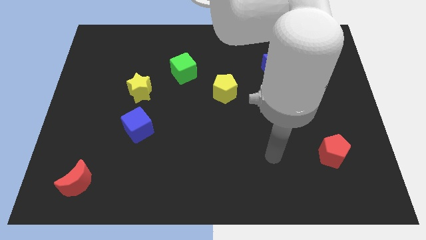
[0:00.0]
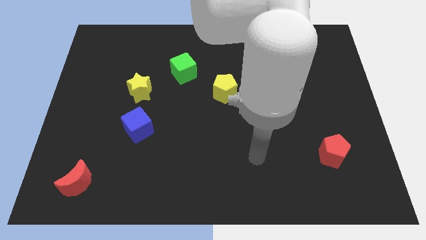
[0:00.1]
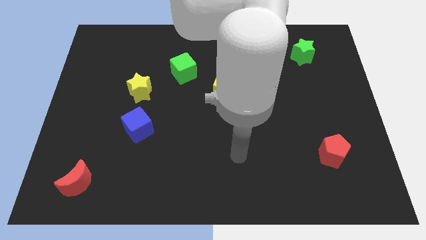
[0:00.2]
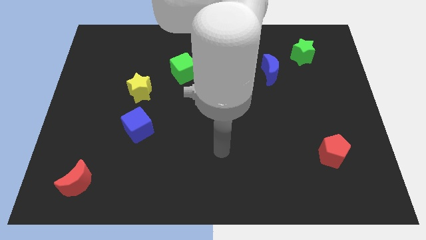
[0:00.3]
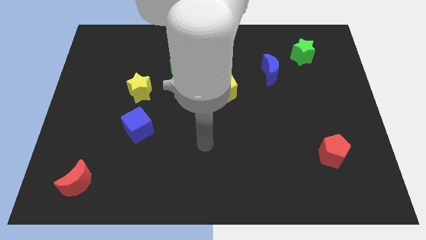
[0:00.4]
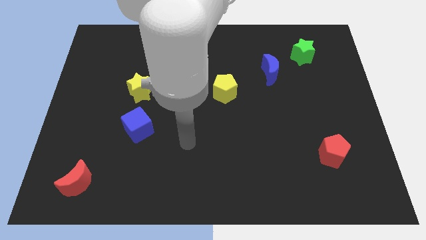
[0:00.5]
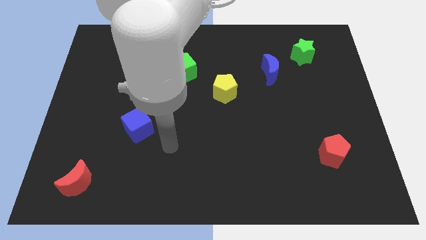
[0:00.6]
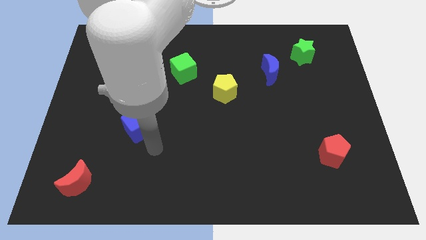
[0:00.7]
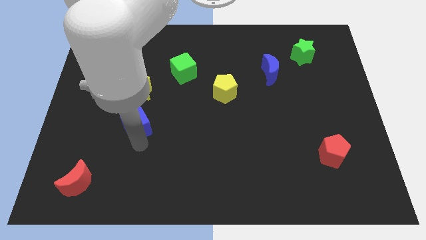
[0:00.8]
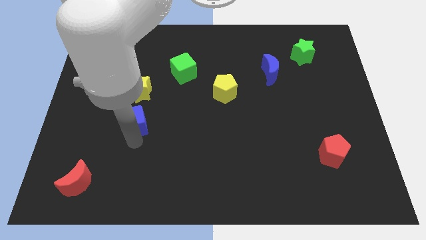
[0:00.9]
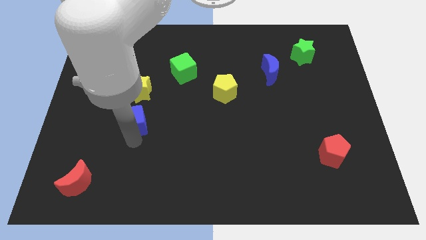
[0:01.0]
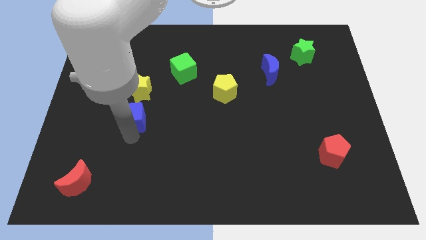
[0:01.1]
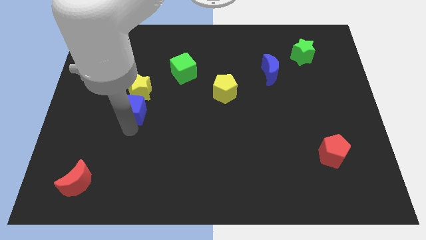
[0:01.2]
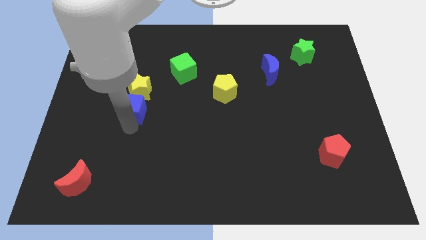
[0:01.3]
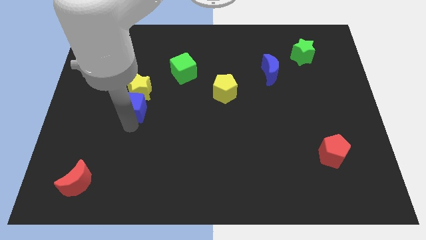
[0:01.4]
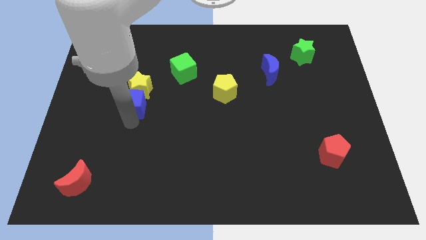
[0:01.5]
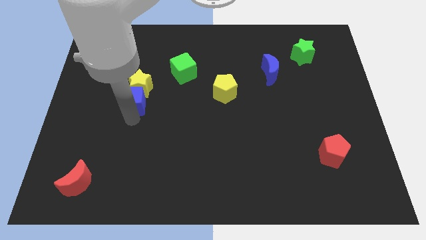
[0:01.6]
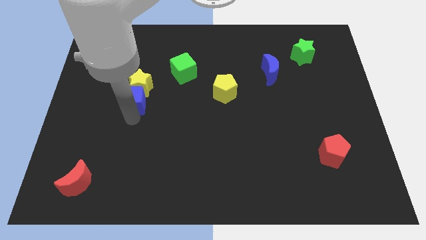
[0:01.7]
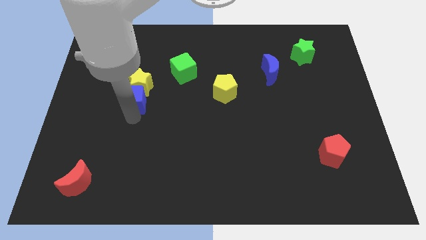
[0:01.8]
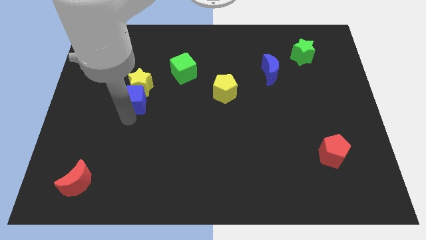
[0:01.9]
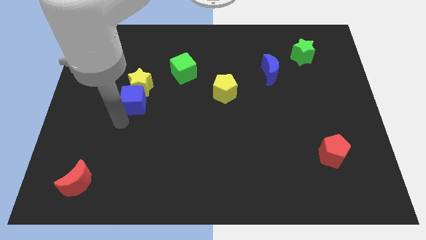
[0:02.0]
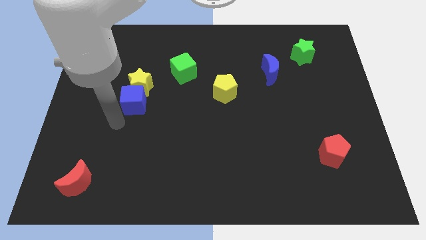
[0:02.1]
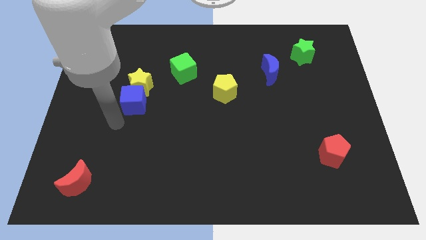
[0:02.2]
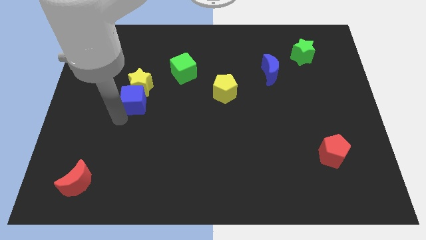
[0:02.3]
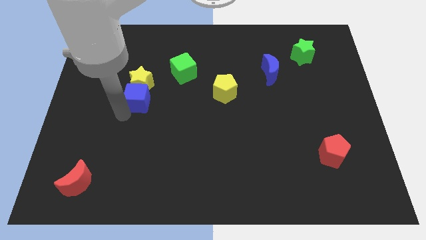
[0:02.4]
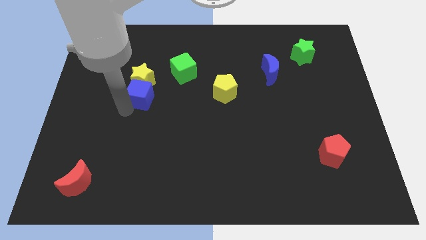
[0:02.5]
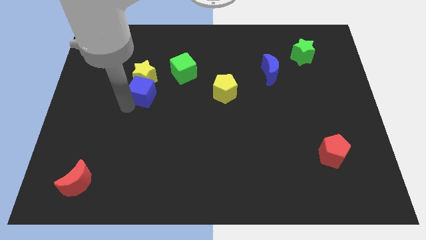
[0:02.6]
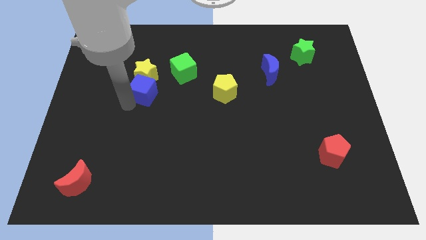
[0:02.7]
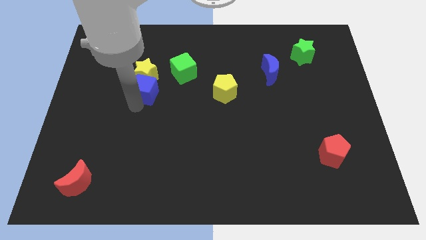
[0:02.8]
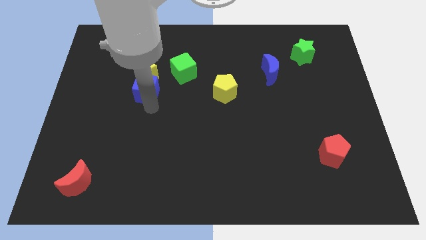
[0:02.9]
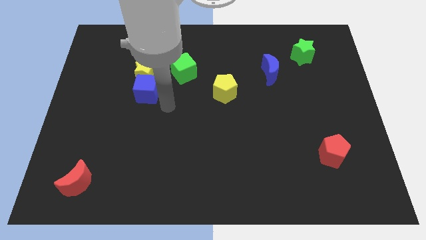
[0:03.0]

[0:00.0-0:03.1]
move the blue cube into the yellow star

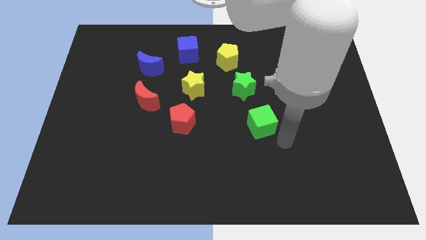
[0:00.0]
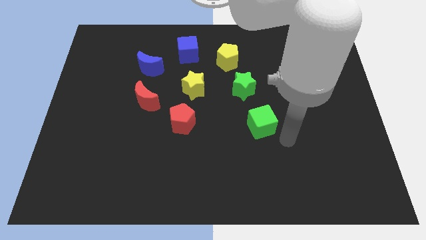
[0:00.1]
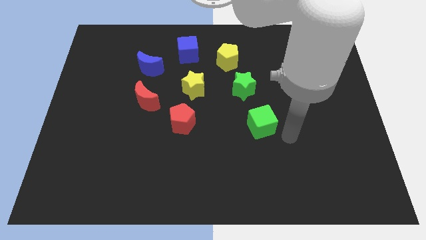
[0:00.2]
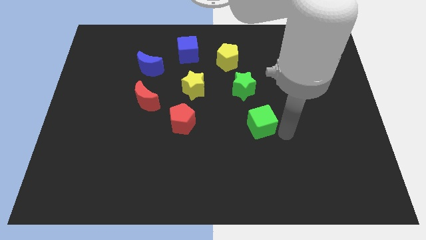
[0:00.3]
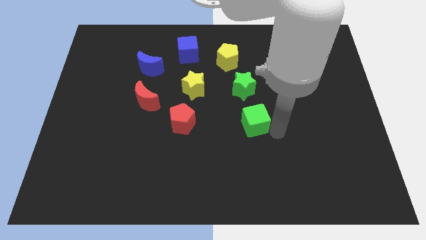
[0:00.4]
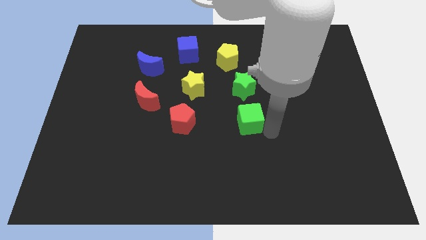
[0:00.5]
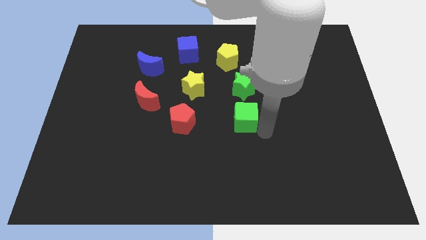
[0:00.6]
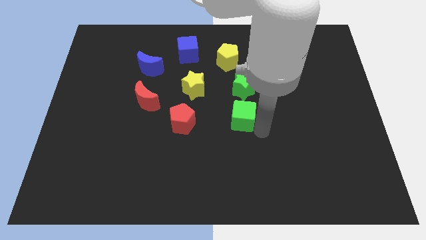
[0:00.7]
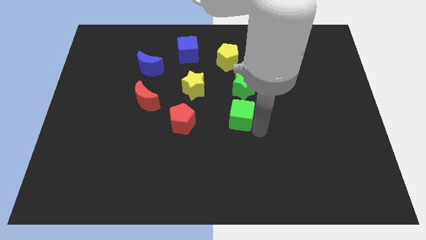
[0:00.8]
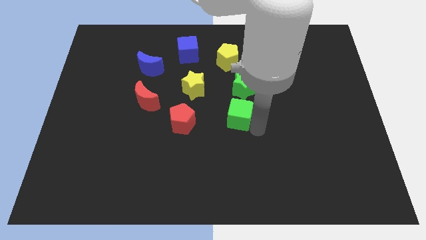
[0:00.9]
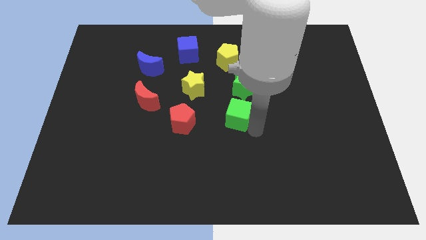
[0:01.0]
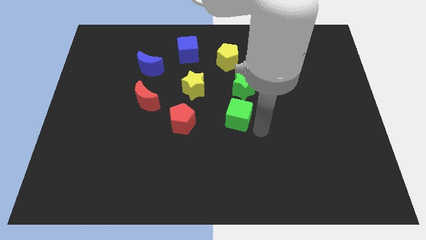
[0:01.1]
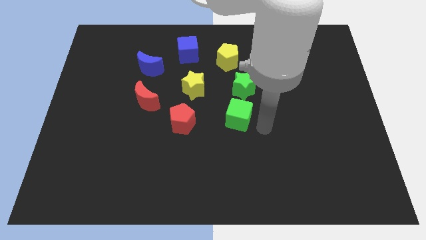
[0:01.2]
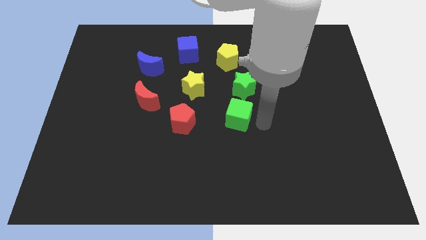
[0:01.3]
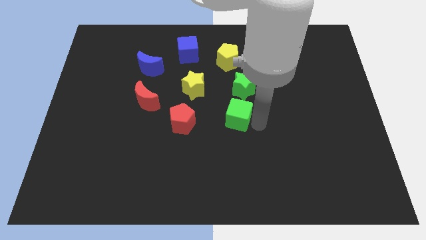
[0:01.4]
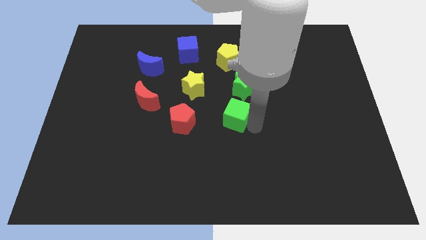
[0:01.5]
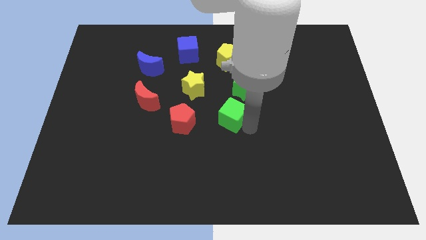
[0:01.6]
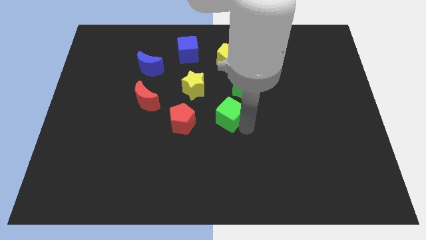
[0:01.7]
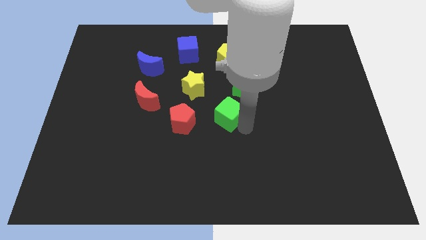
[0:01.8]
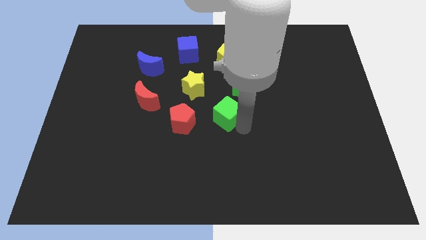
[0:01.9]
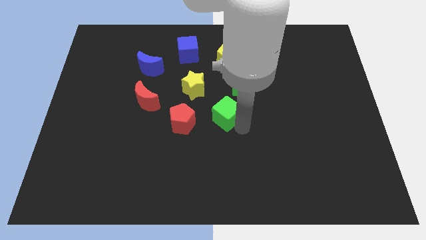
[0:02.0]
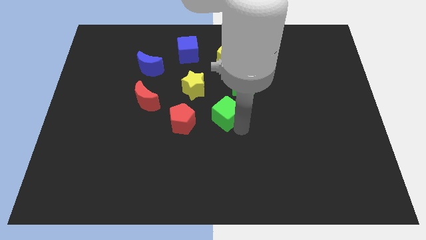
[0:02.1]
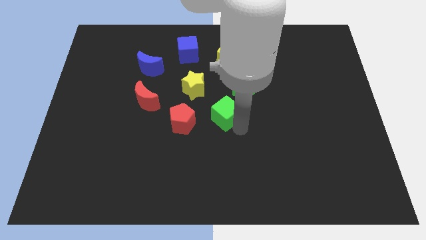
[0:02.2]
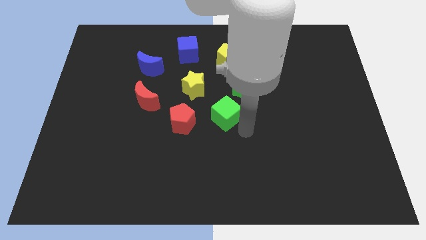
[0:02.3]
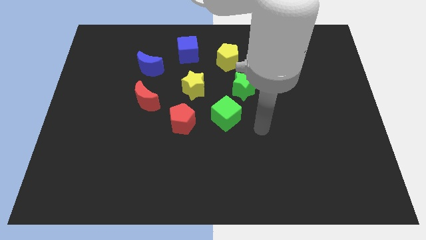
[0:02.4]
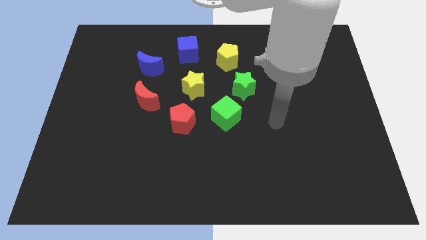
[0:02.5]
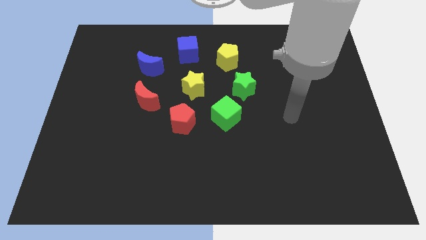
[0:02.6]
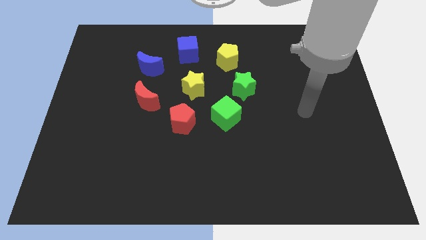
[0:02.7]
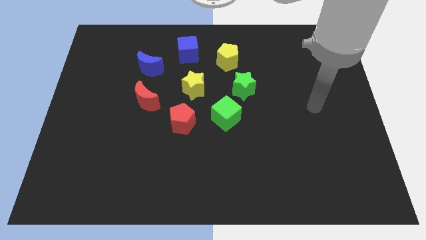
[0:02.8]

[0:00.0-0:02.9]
push green cube into the group of blocks

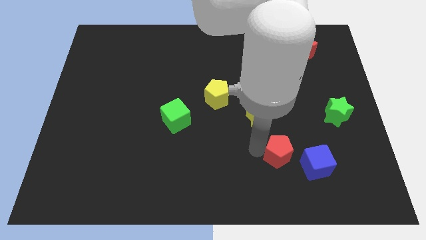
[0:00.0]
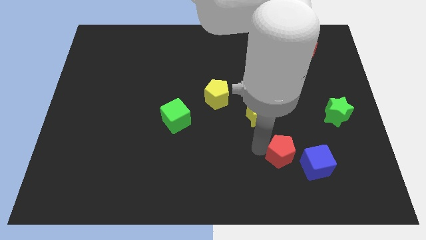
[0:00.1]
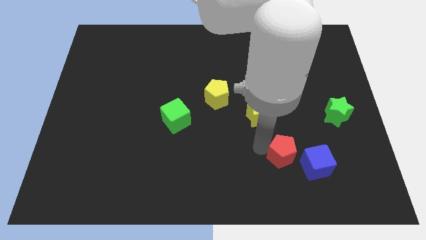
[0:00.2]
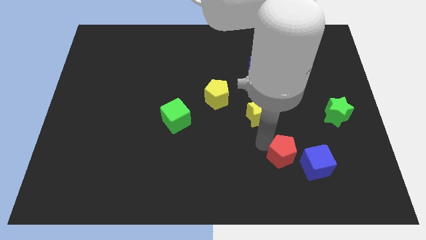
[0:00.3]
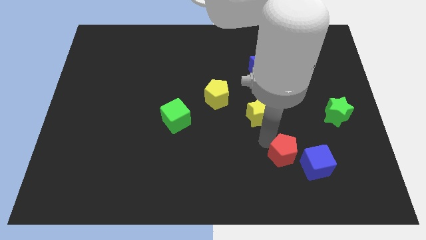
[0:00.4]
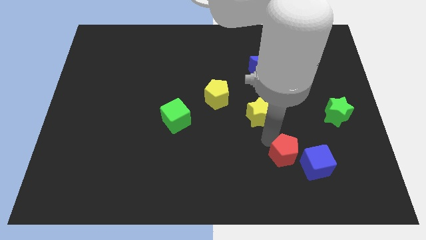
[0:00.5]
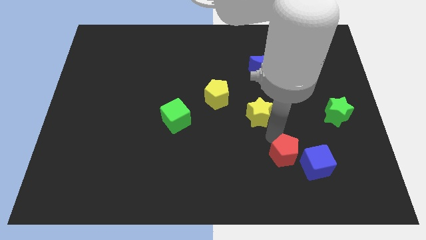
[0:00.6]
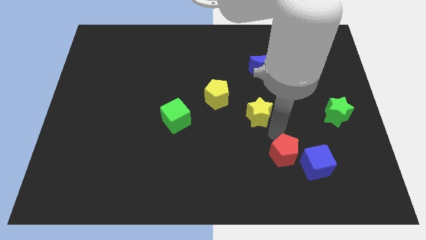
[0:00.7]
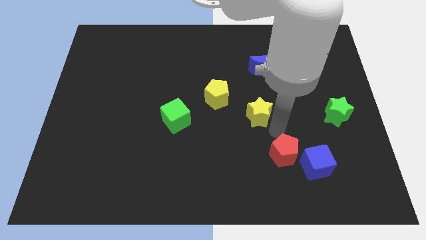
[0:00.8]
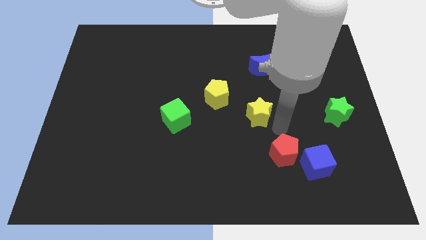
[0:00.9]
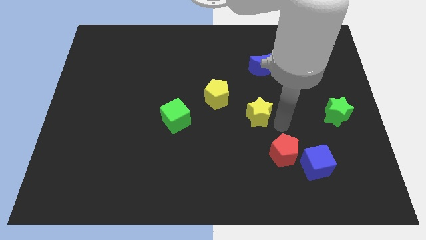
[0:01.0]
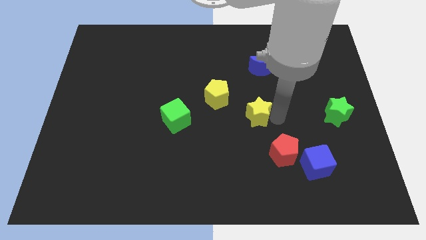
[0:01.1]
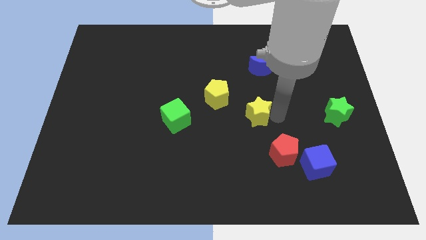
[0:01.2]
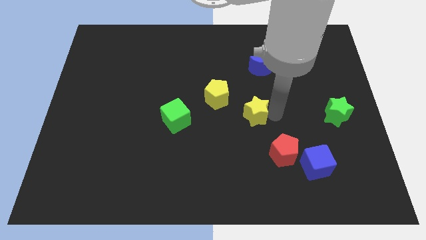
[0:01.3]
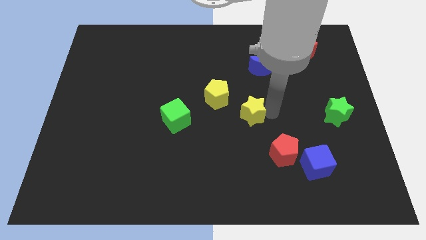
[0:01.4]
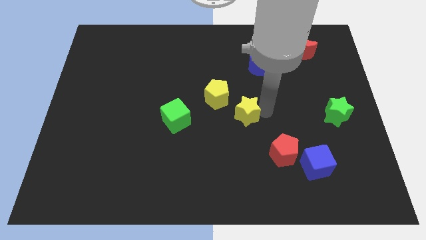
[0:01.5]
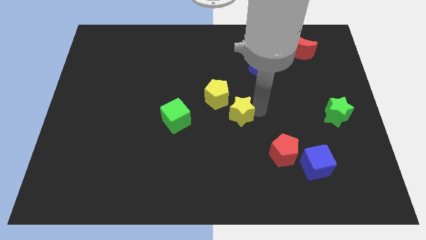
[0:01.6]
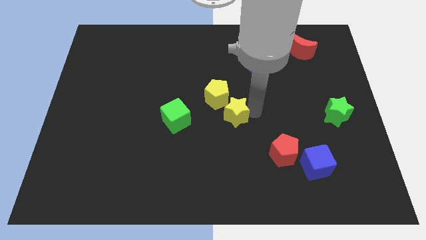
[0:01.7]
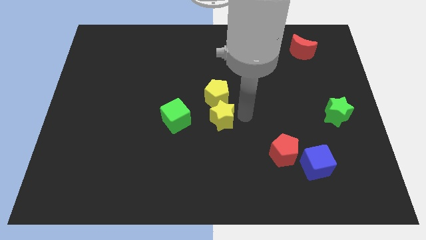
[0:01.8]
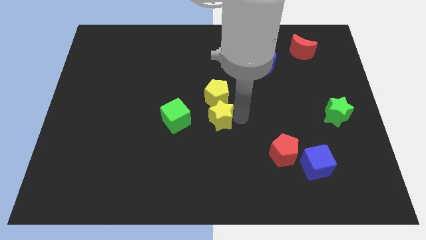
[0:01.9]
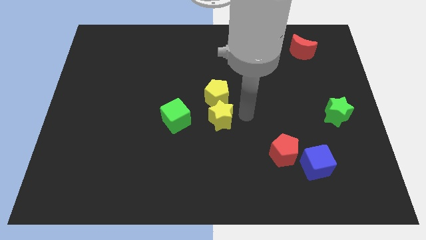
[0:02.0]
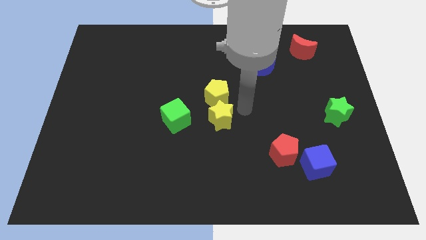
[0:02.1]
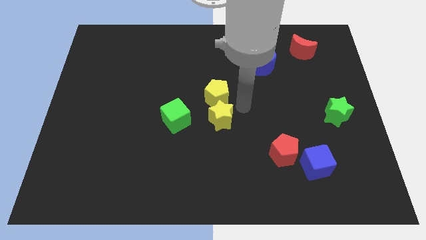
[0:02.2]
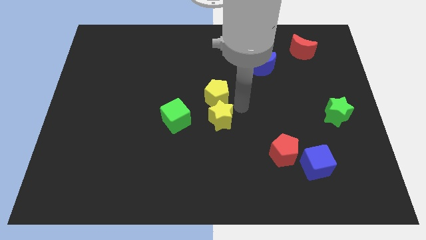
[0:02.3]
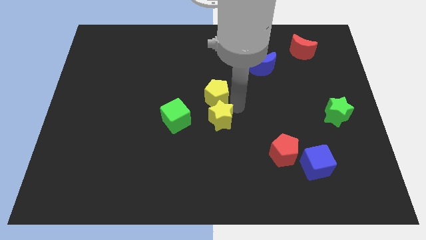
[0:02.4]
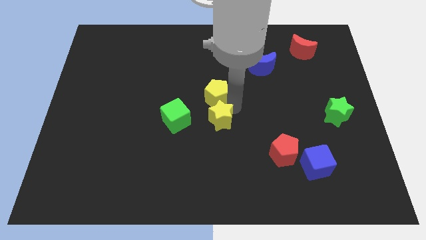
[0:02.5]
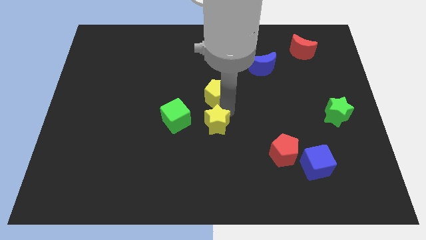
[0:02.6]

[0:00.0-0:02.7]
place yellow star to the bottom of yellow pentagon

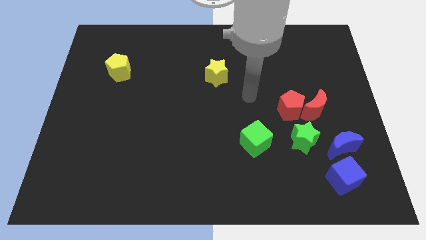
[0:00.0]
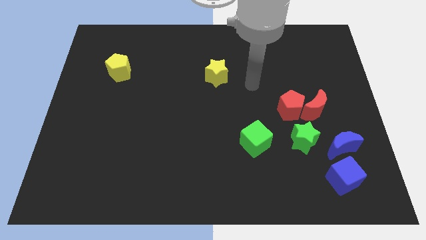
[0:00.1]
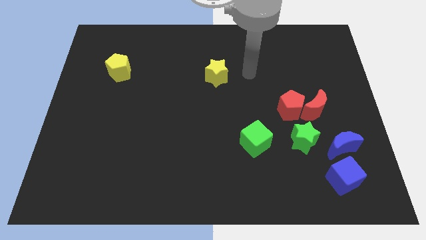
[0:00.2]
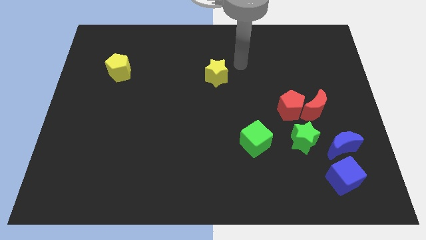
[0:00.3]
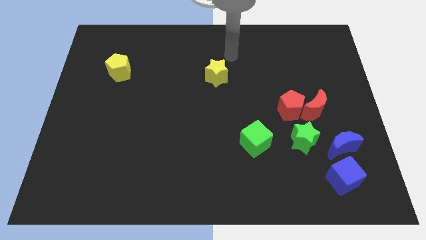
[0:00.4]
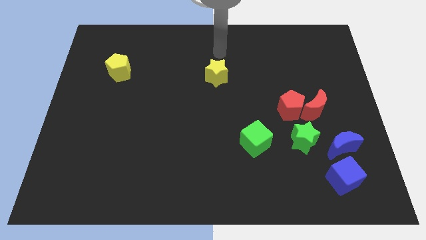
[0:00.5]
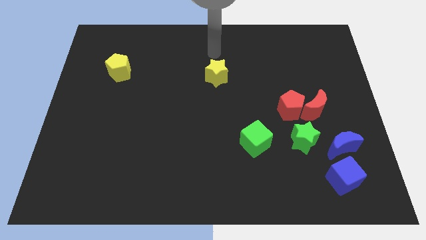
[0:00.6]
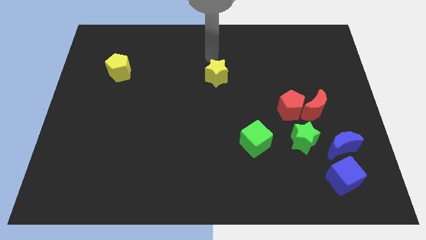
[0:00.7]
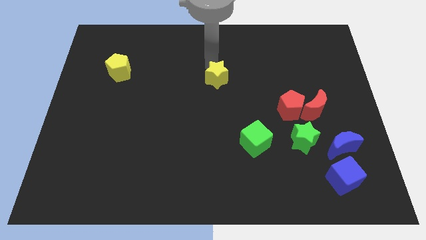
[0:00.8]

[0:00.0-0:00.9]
move arm on the top of yellow star
